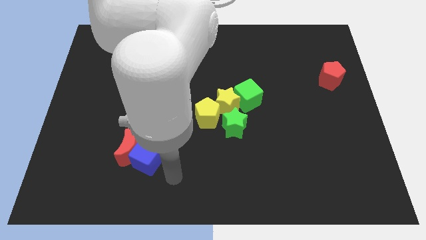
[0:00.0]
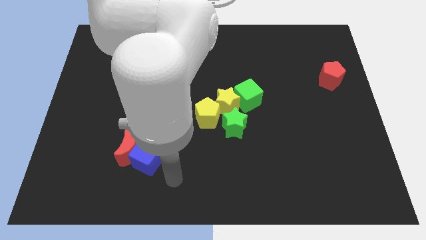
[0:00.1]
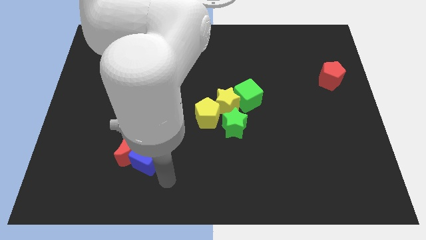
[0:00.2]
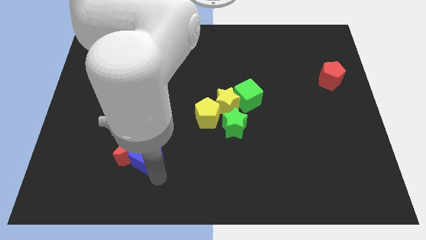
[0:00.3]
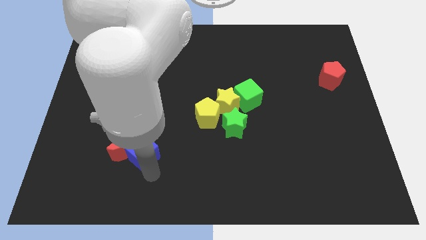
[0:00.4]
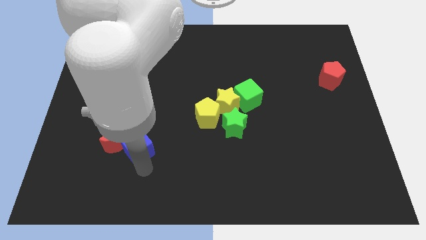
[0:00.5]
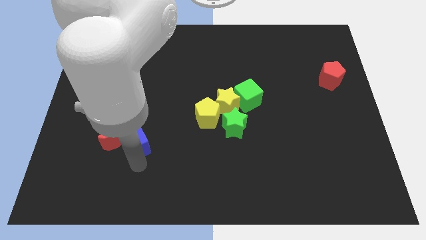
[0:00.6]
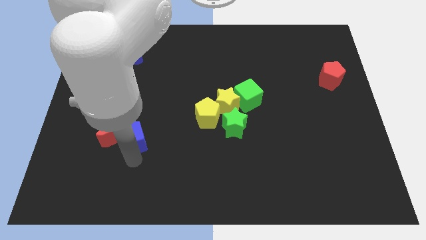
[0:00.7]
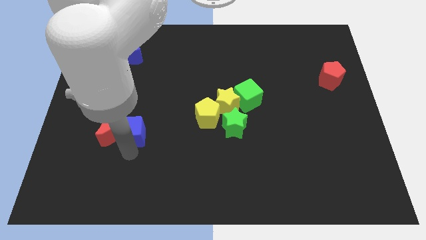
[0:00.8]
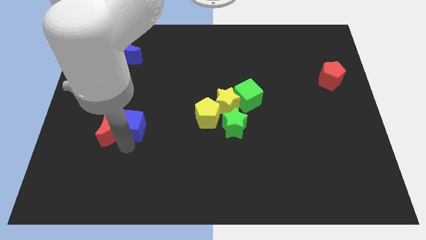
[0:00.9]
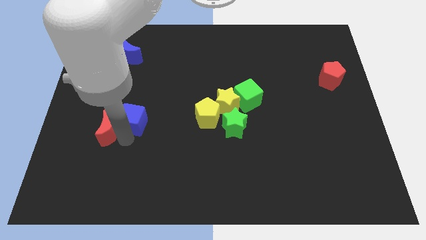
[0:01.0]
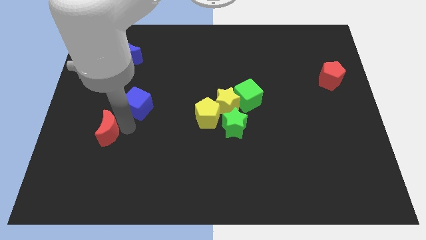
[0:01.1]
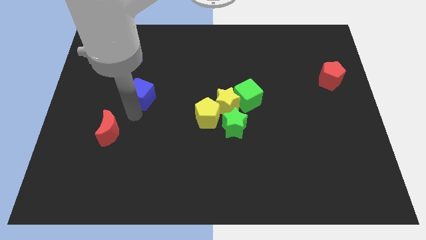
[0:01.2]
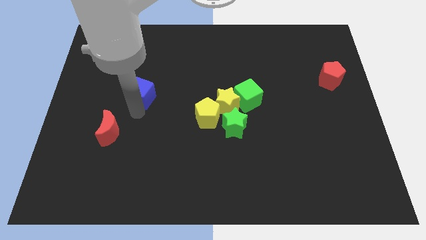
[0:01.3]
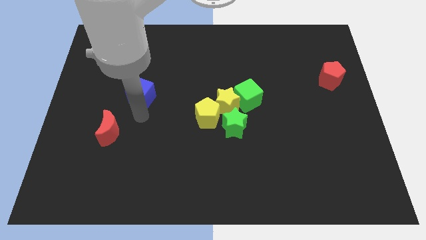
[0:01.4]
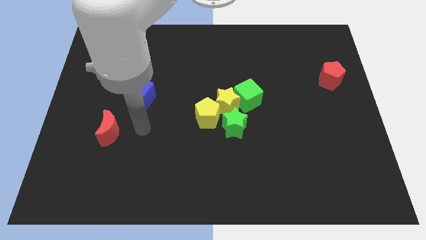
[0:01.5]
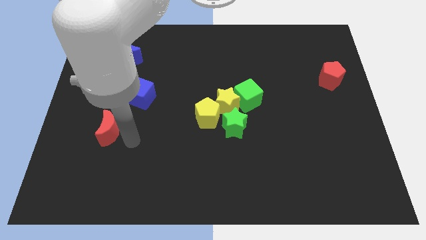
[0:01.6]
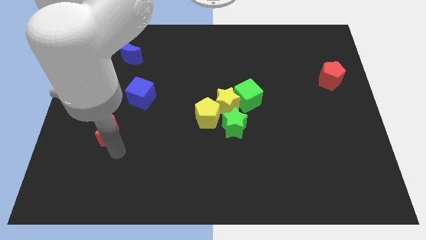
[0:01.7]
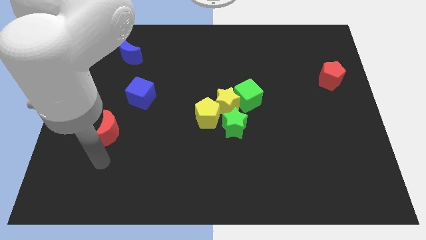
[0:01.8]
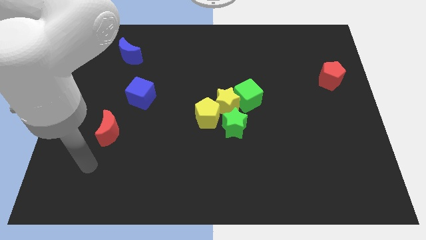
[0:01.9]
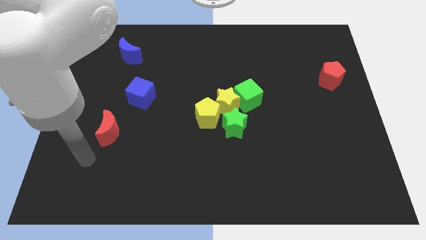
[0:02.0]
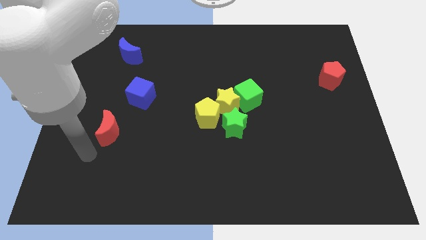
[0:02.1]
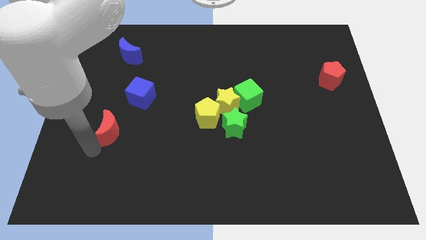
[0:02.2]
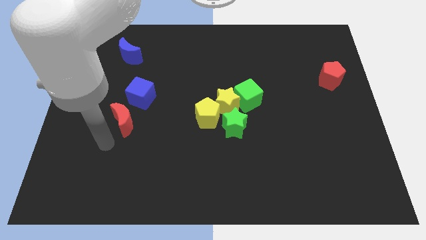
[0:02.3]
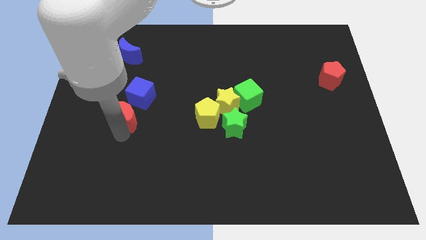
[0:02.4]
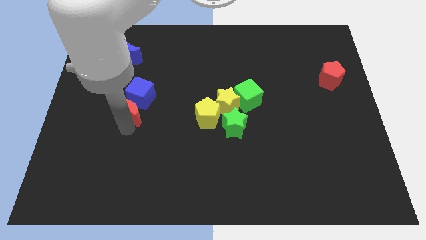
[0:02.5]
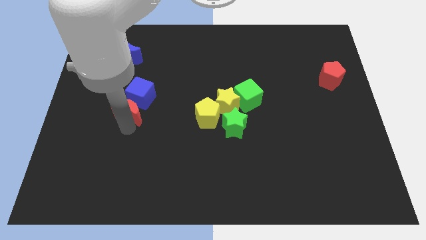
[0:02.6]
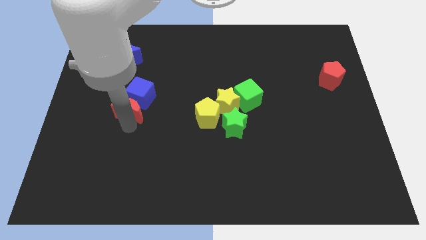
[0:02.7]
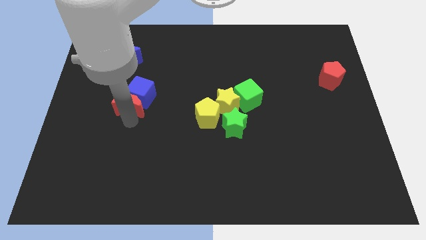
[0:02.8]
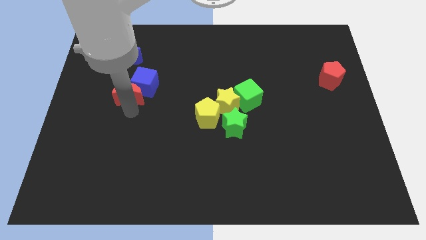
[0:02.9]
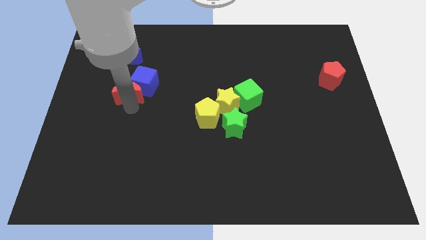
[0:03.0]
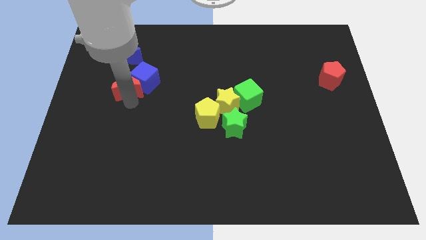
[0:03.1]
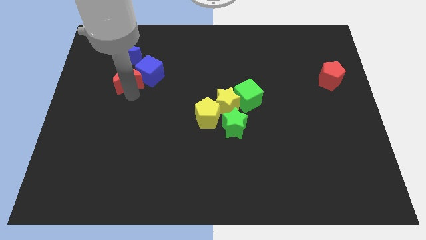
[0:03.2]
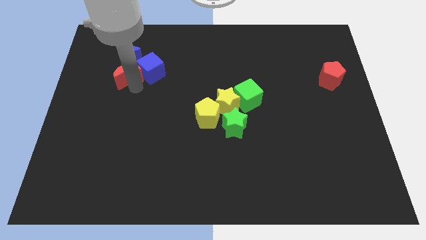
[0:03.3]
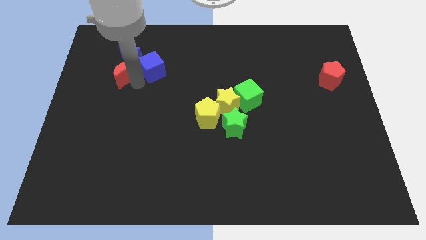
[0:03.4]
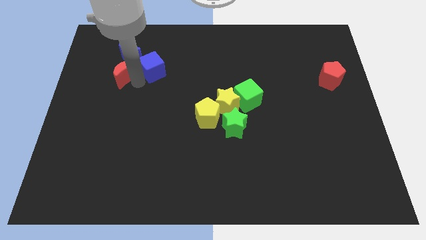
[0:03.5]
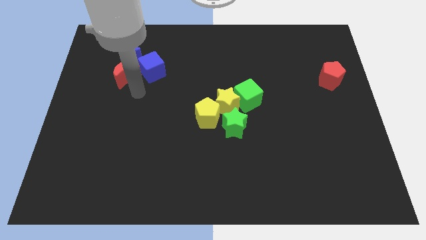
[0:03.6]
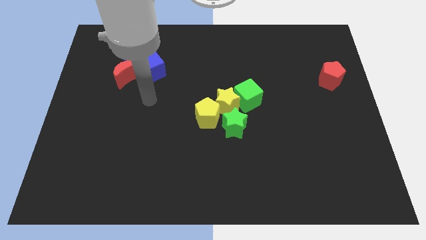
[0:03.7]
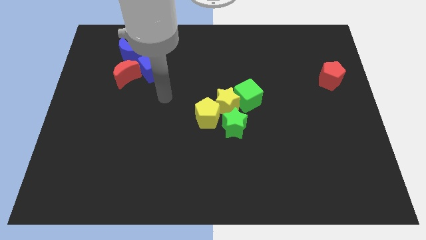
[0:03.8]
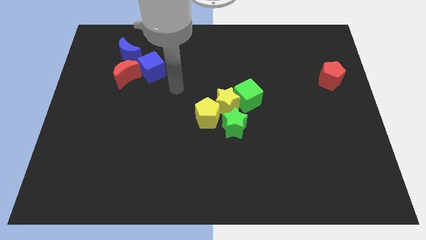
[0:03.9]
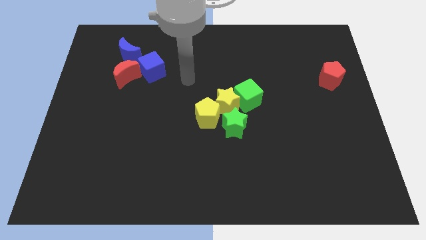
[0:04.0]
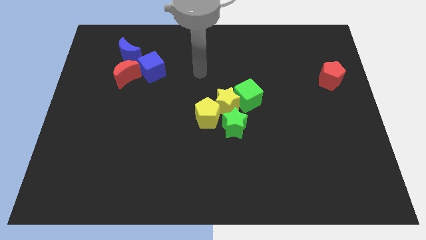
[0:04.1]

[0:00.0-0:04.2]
place the blue cube and red moon into blue moon at bottom

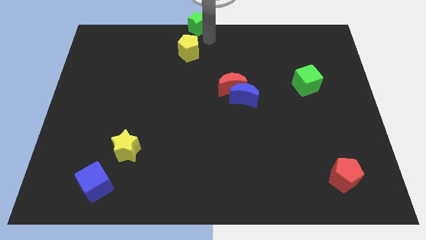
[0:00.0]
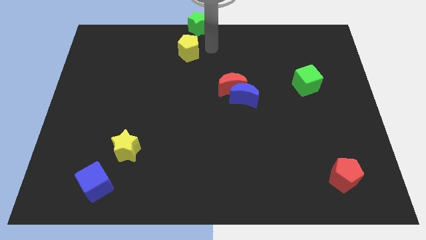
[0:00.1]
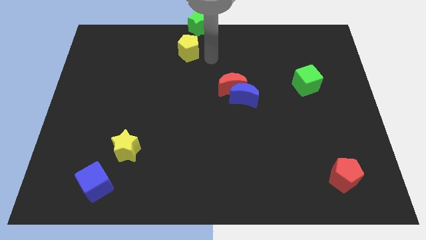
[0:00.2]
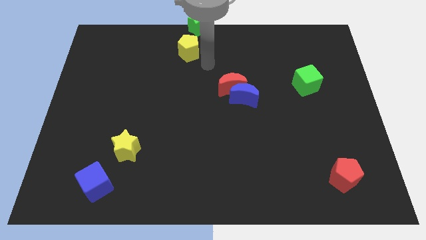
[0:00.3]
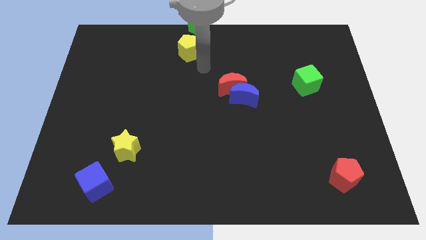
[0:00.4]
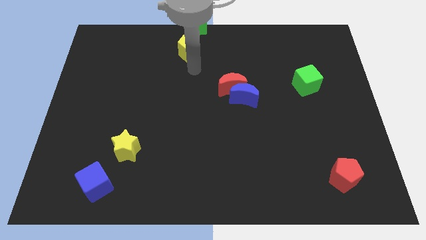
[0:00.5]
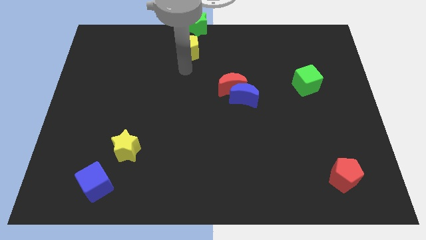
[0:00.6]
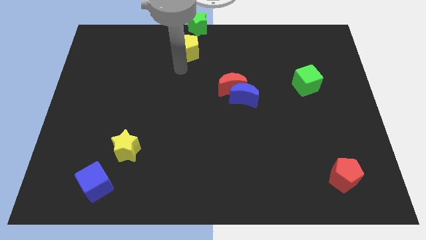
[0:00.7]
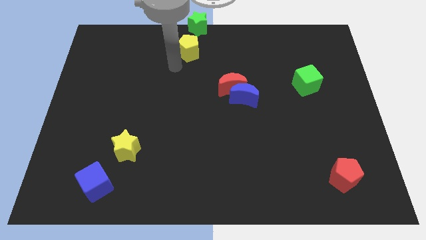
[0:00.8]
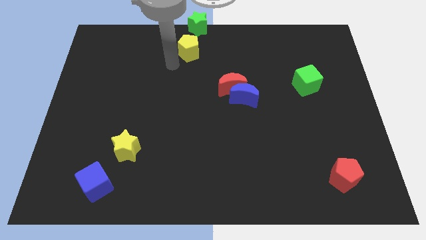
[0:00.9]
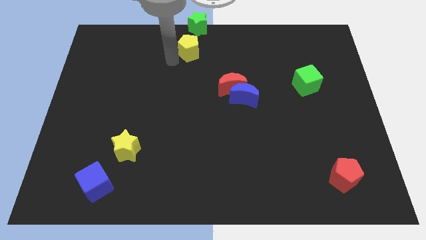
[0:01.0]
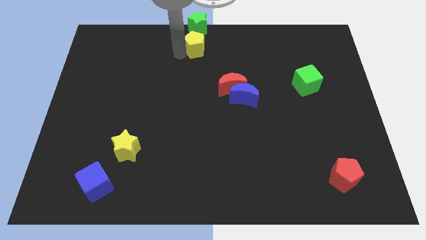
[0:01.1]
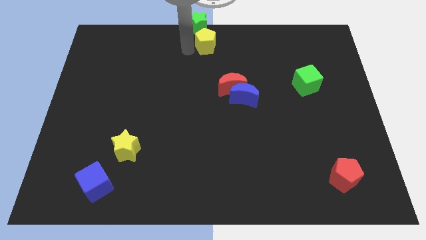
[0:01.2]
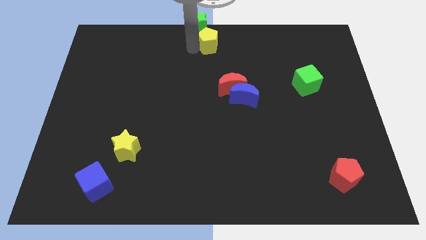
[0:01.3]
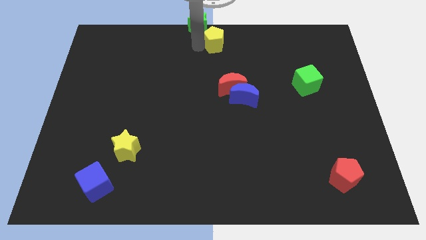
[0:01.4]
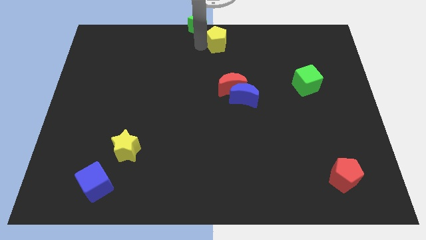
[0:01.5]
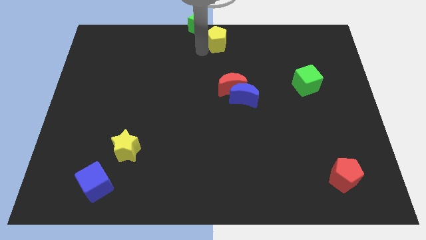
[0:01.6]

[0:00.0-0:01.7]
push the yellow pentagon slightly to the top

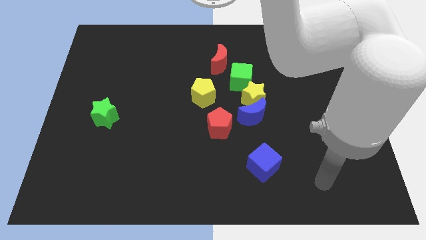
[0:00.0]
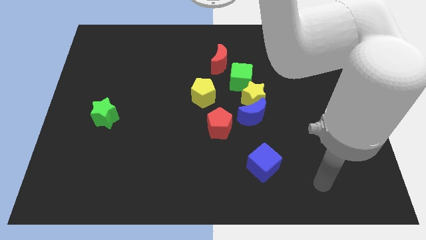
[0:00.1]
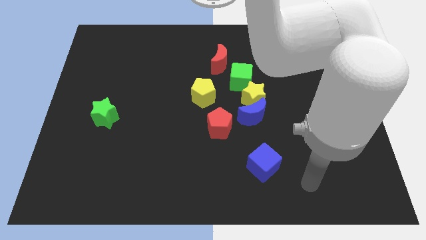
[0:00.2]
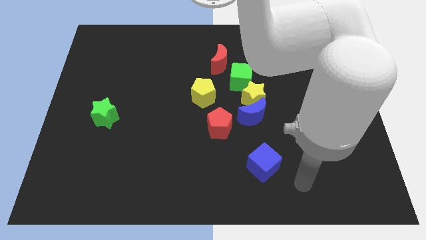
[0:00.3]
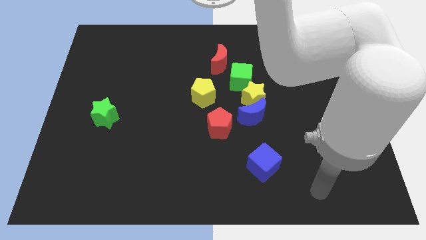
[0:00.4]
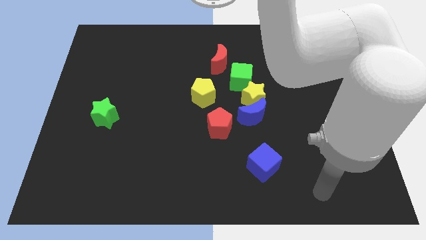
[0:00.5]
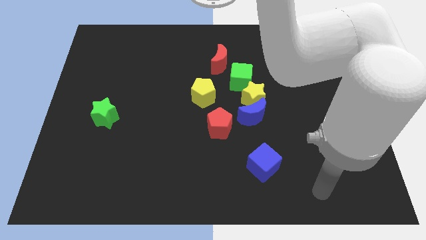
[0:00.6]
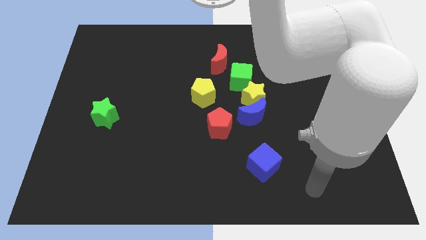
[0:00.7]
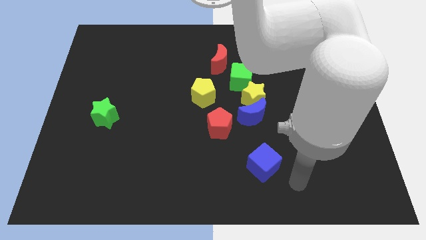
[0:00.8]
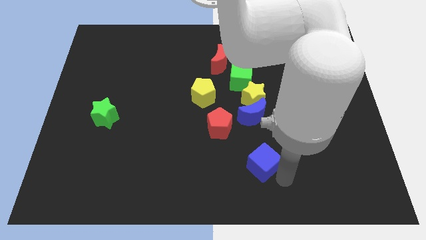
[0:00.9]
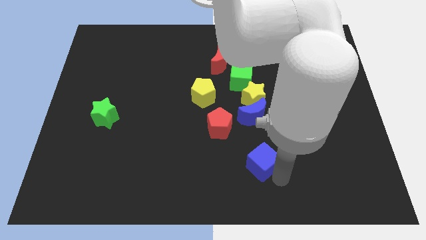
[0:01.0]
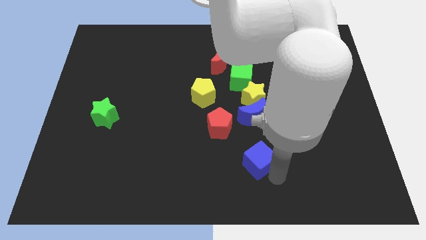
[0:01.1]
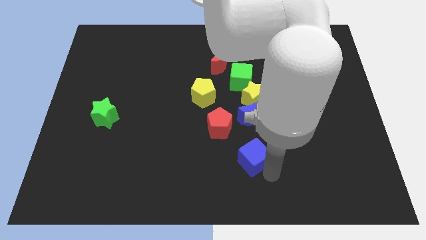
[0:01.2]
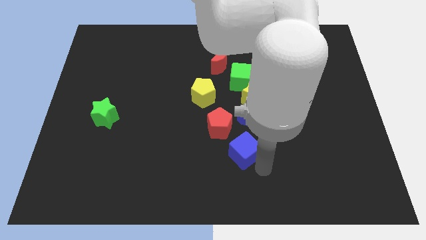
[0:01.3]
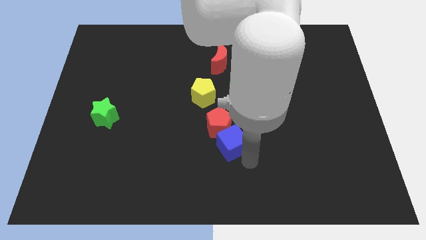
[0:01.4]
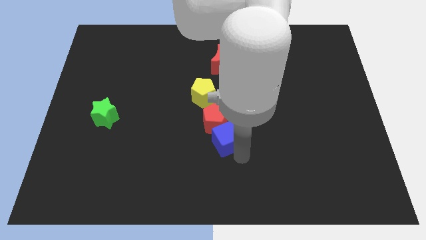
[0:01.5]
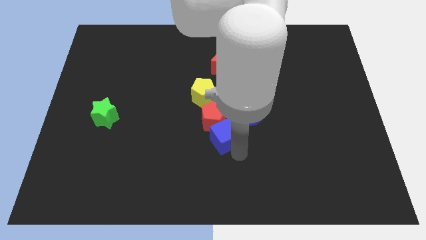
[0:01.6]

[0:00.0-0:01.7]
slide the blue cube into the red pentagon

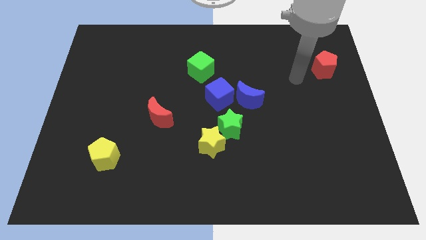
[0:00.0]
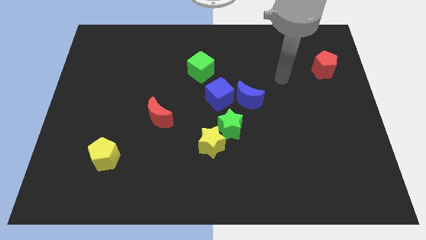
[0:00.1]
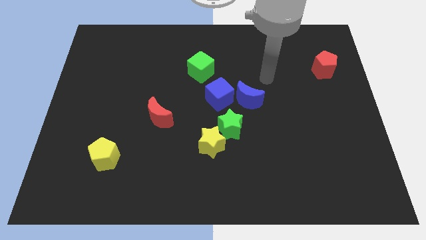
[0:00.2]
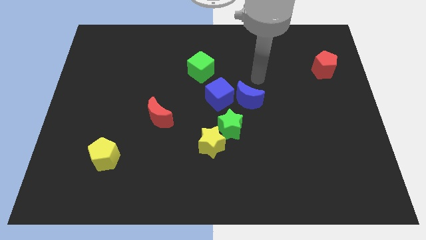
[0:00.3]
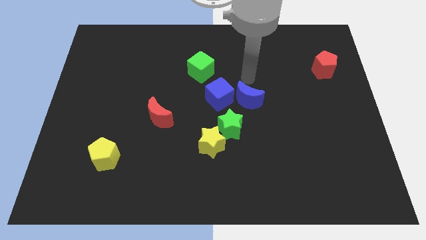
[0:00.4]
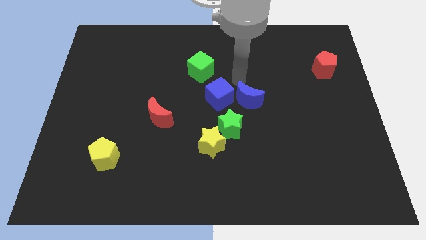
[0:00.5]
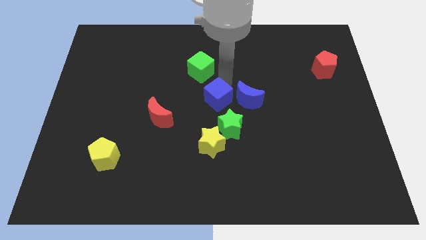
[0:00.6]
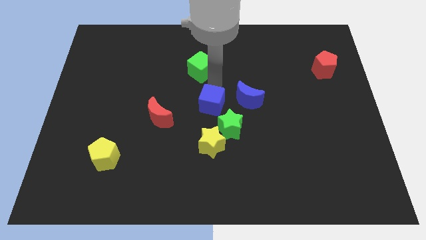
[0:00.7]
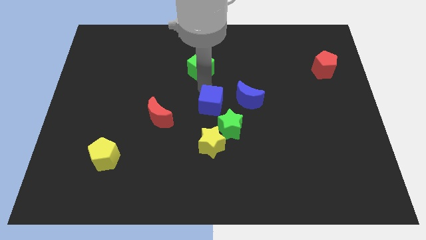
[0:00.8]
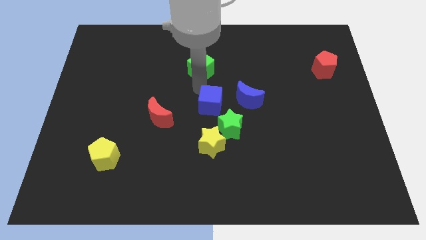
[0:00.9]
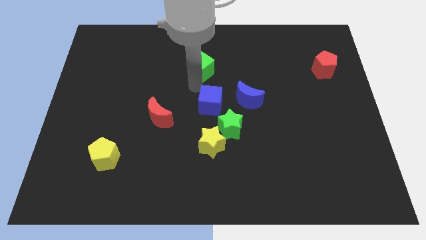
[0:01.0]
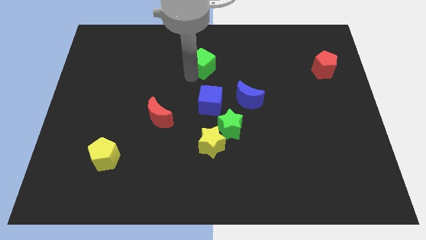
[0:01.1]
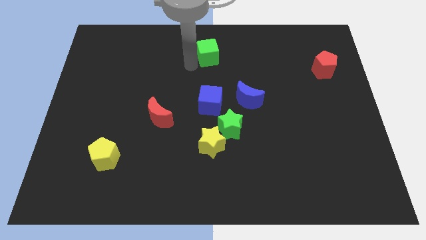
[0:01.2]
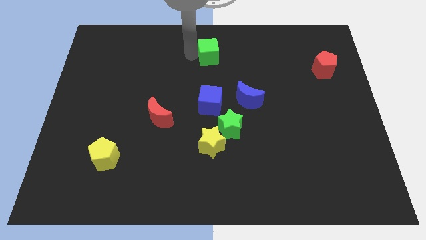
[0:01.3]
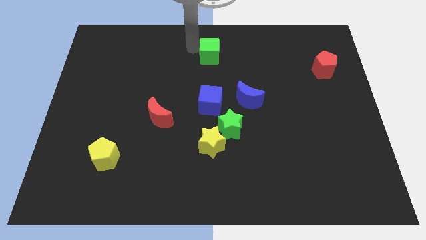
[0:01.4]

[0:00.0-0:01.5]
push the green cube slightly towards up
